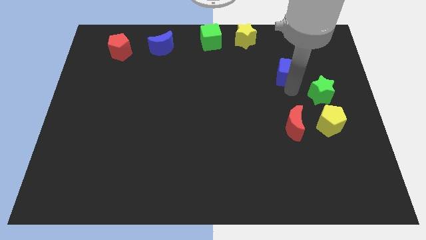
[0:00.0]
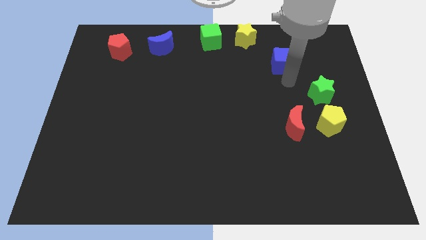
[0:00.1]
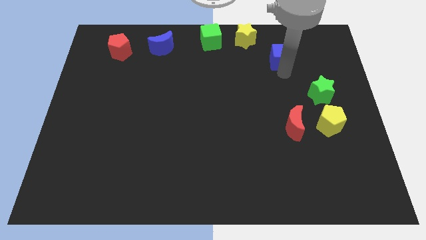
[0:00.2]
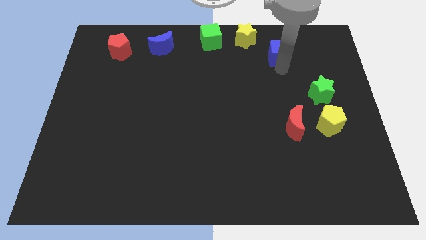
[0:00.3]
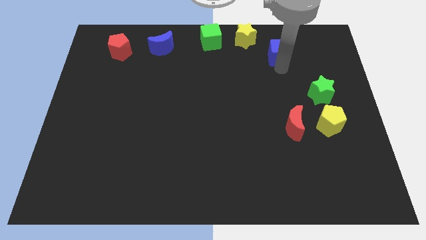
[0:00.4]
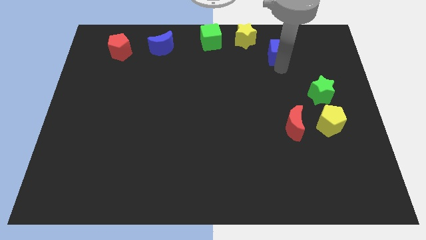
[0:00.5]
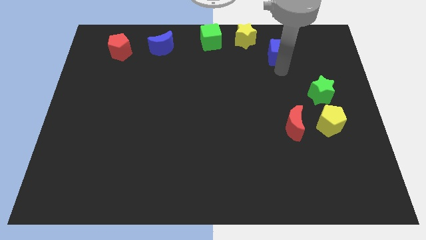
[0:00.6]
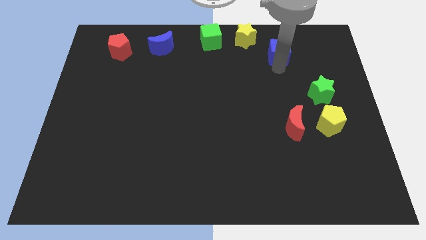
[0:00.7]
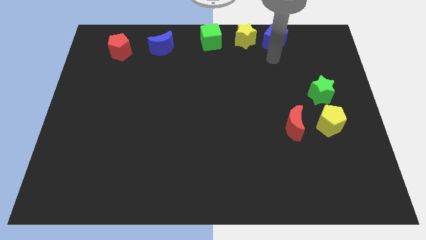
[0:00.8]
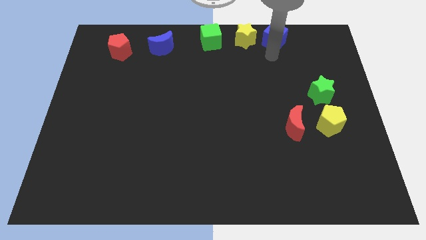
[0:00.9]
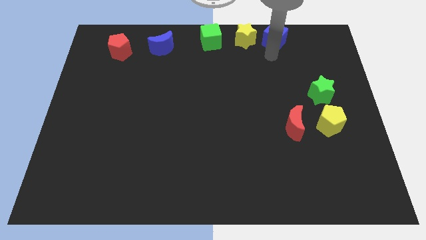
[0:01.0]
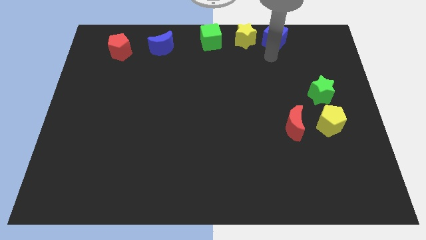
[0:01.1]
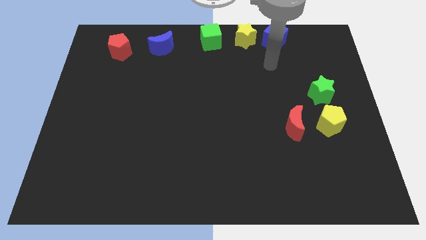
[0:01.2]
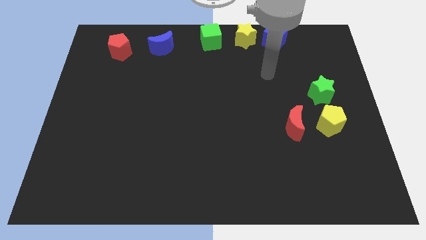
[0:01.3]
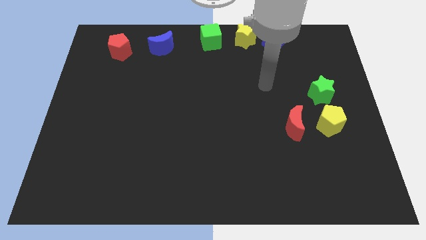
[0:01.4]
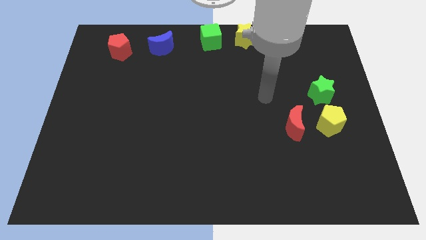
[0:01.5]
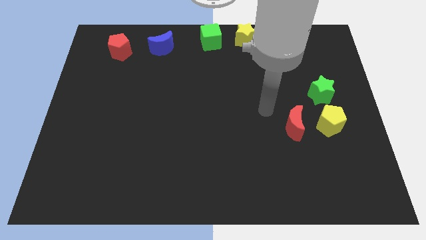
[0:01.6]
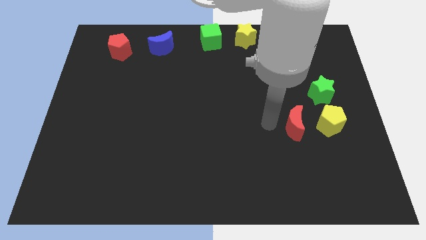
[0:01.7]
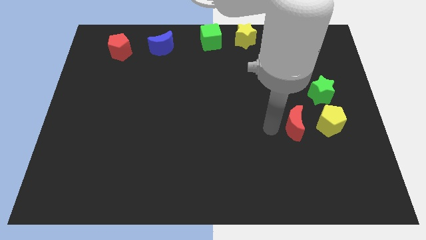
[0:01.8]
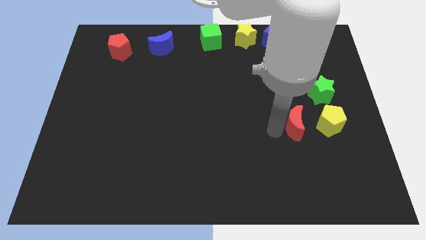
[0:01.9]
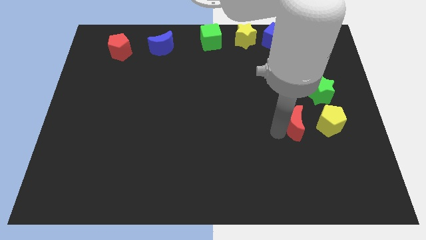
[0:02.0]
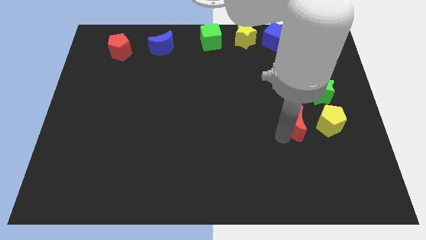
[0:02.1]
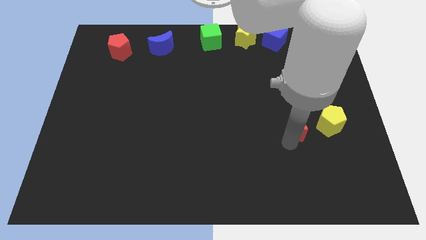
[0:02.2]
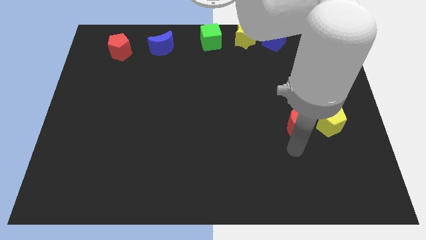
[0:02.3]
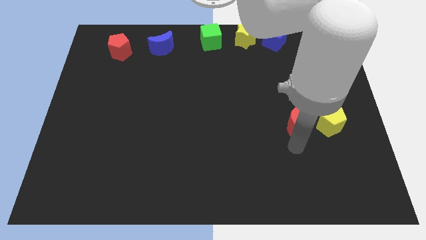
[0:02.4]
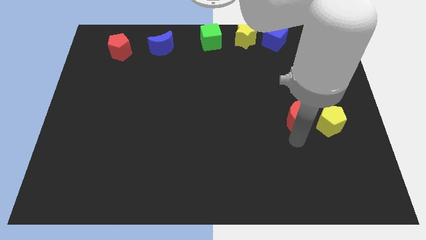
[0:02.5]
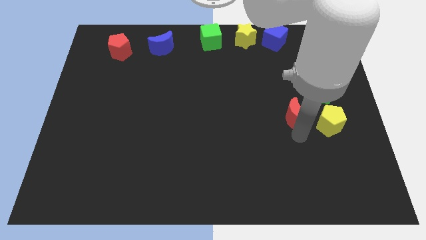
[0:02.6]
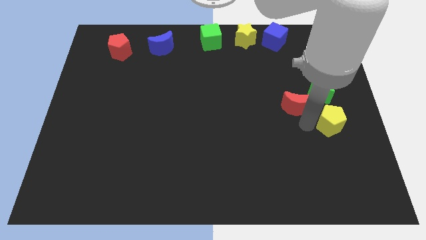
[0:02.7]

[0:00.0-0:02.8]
put the blue cube to the right of the yellow star

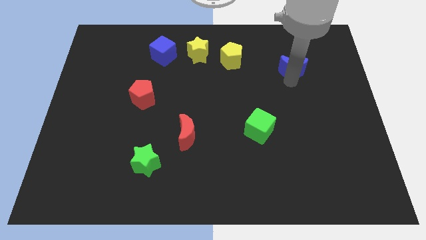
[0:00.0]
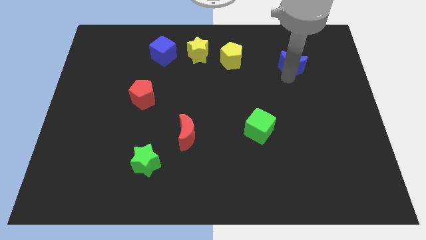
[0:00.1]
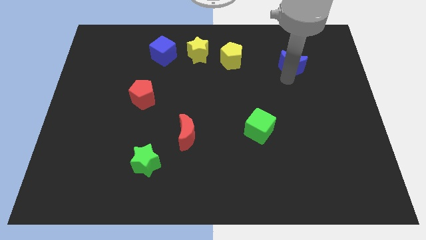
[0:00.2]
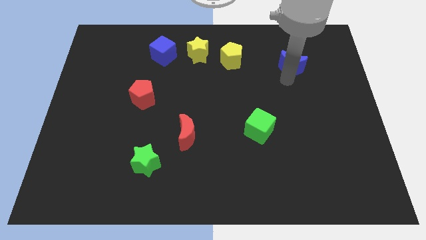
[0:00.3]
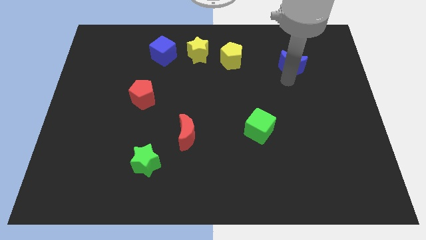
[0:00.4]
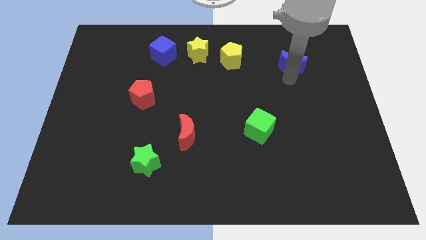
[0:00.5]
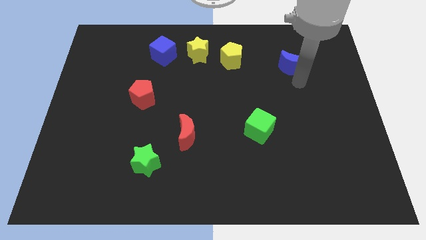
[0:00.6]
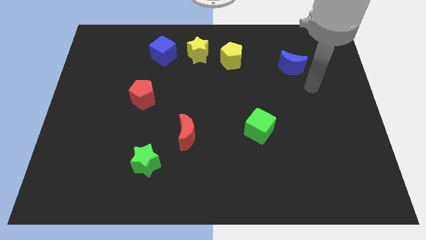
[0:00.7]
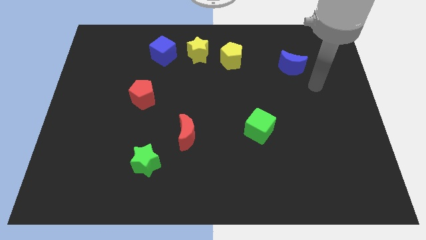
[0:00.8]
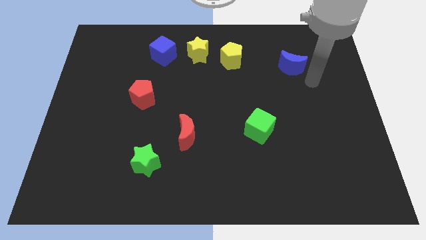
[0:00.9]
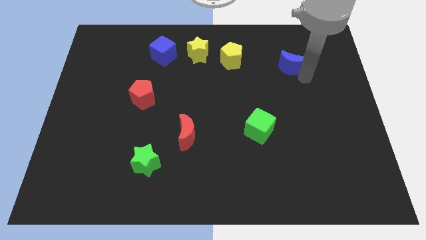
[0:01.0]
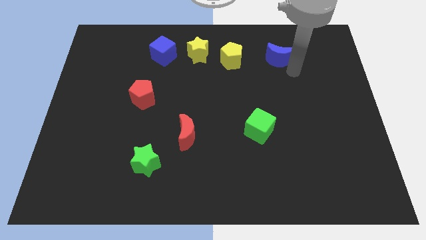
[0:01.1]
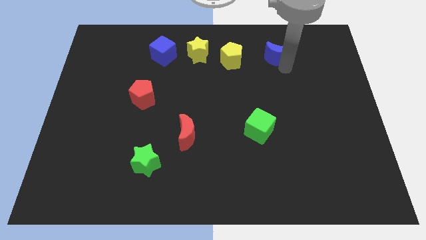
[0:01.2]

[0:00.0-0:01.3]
place blue crescent beside yellow pentagon

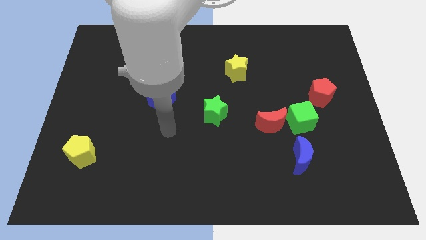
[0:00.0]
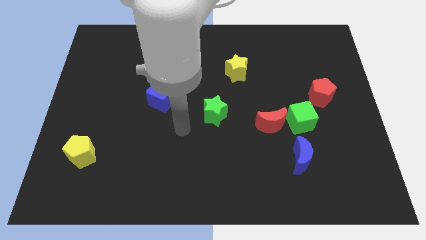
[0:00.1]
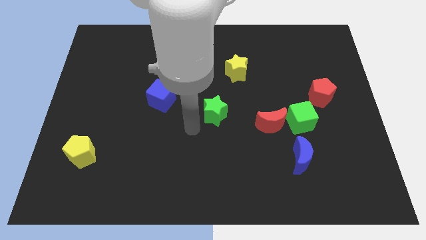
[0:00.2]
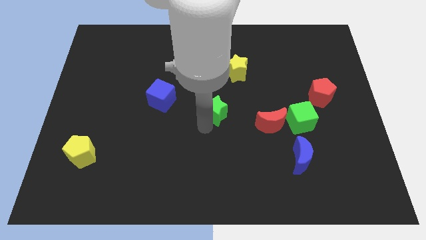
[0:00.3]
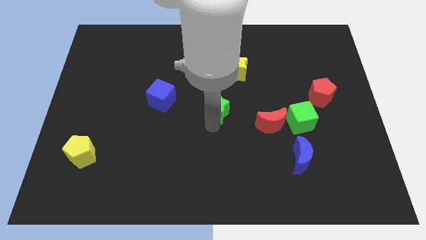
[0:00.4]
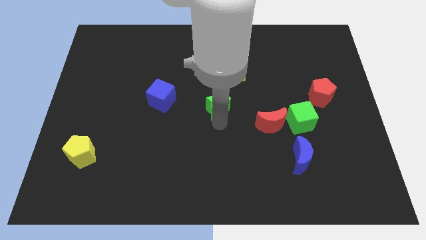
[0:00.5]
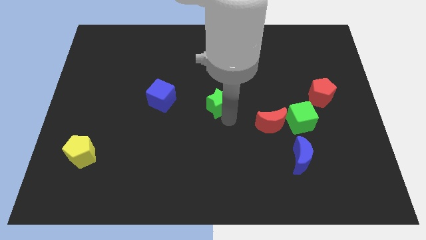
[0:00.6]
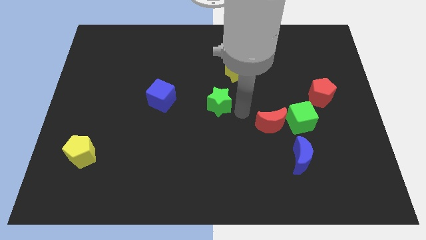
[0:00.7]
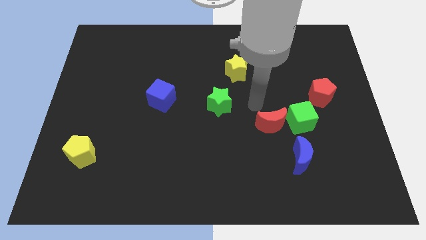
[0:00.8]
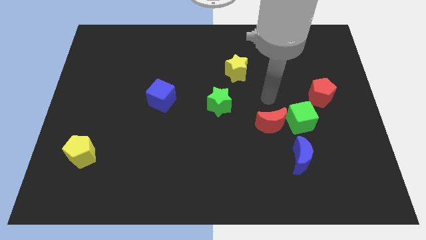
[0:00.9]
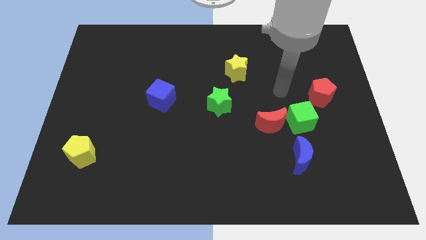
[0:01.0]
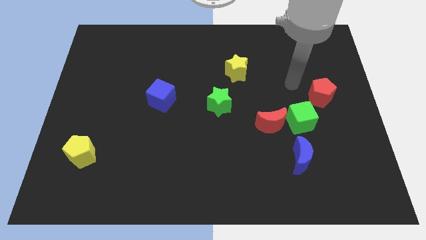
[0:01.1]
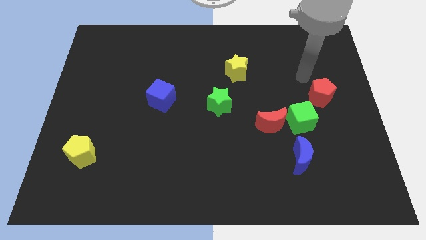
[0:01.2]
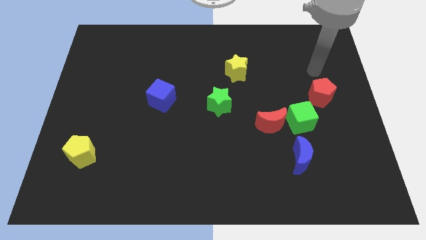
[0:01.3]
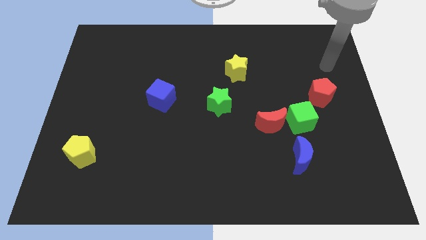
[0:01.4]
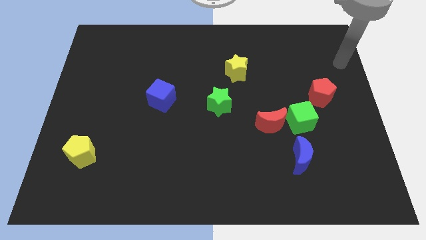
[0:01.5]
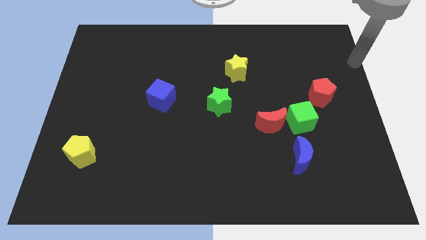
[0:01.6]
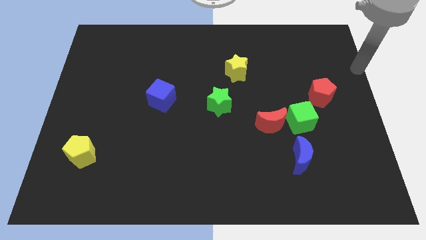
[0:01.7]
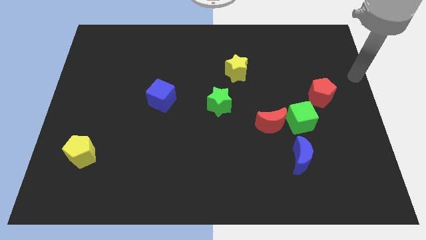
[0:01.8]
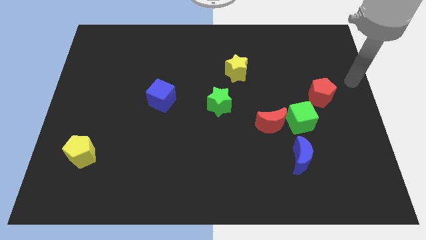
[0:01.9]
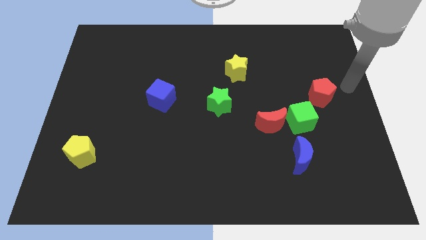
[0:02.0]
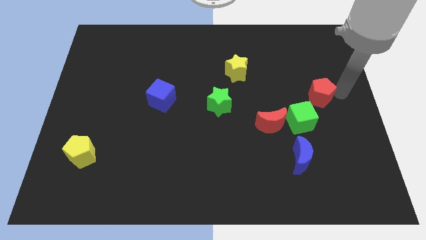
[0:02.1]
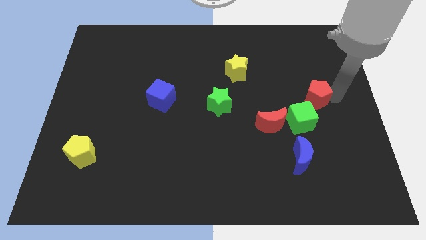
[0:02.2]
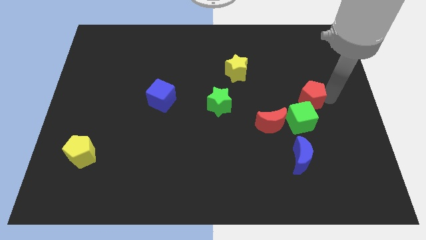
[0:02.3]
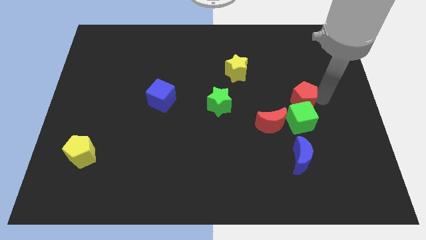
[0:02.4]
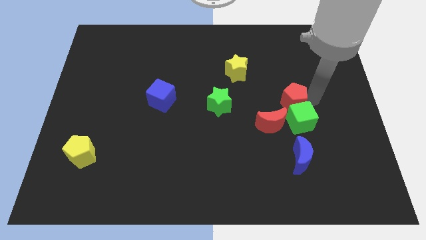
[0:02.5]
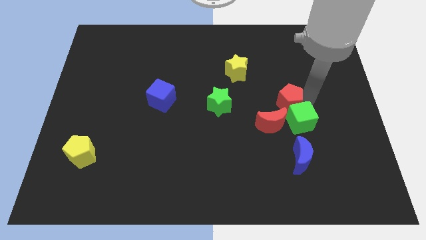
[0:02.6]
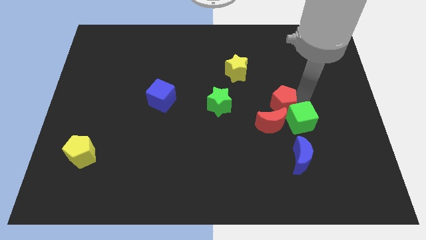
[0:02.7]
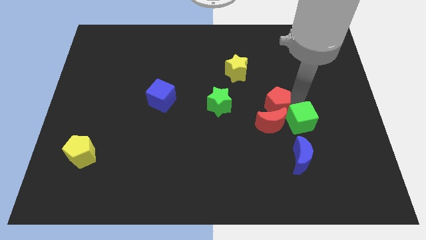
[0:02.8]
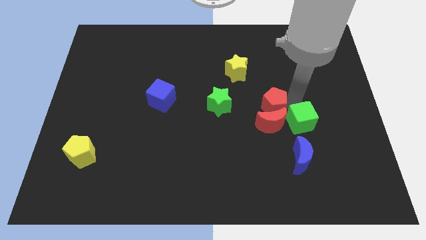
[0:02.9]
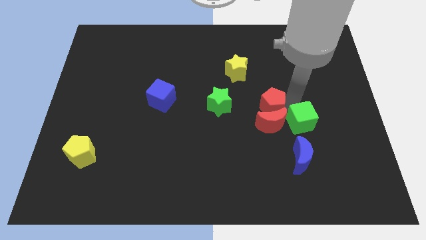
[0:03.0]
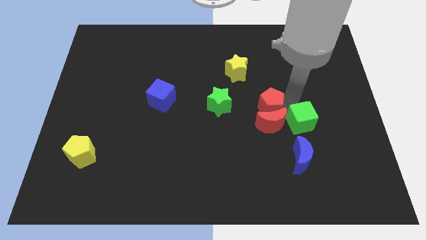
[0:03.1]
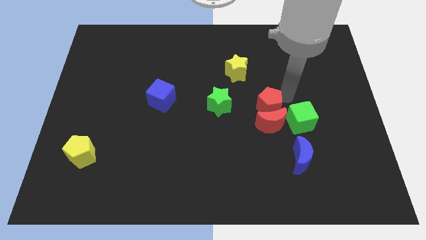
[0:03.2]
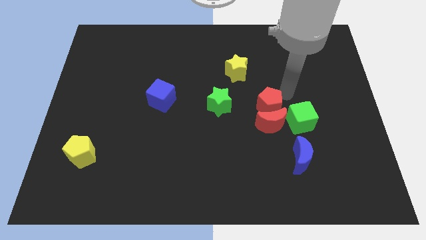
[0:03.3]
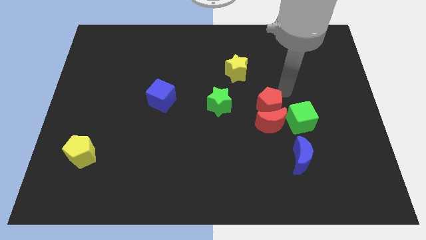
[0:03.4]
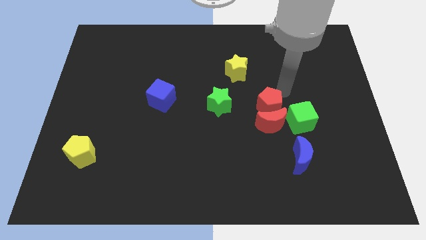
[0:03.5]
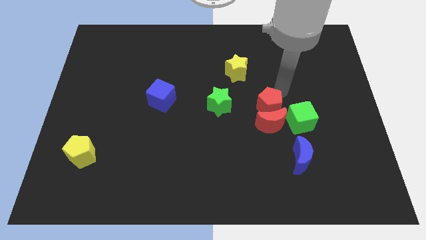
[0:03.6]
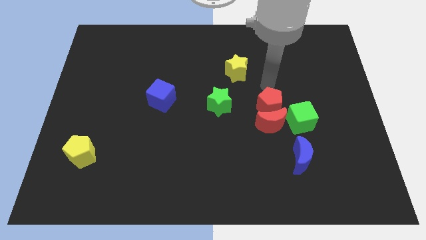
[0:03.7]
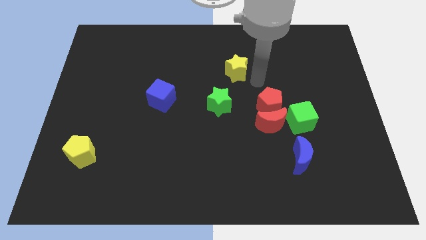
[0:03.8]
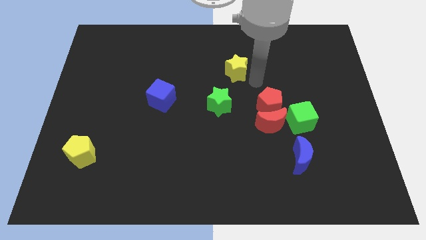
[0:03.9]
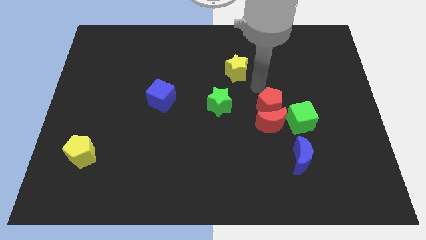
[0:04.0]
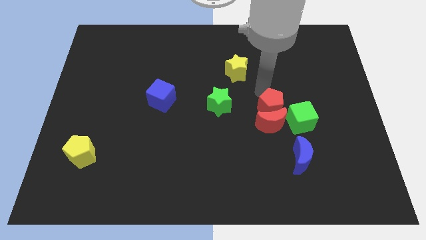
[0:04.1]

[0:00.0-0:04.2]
place the red pentagon above the red moon

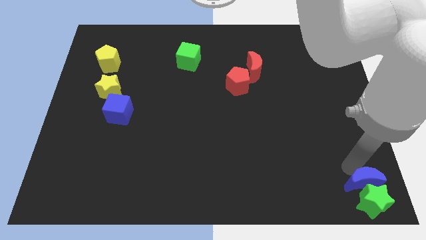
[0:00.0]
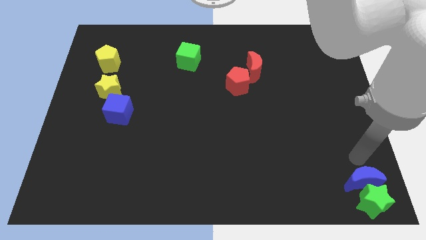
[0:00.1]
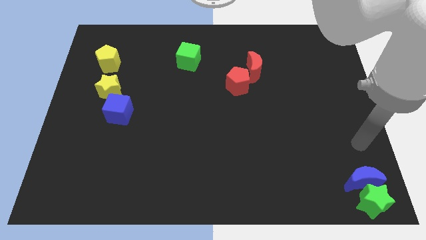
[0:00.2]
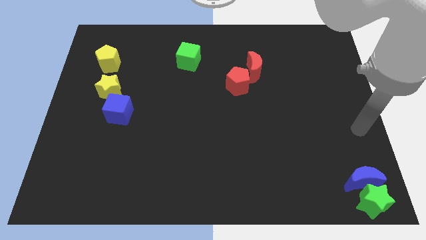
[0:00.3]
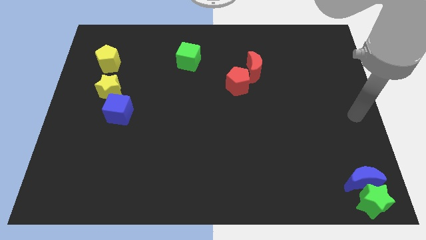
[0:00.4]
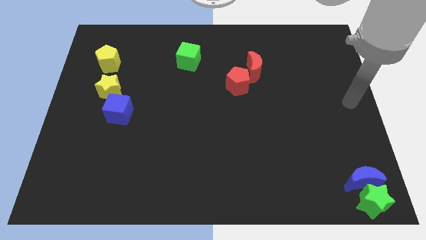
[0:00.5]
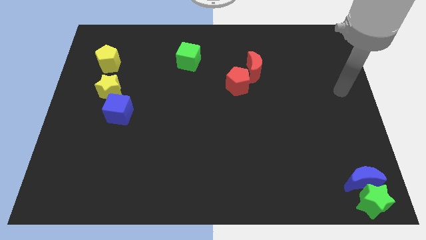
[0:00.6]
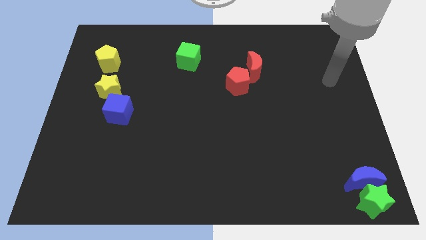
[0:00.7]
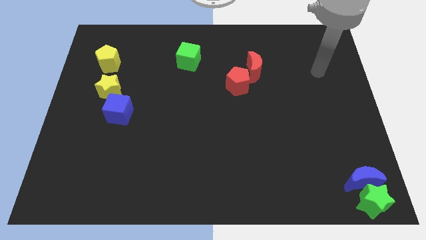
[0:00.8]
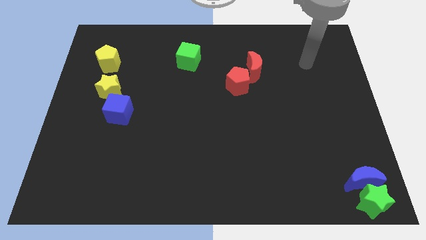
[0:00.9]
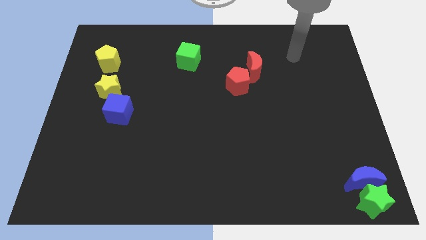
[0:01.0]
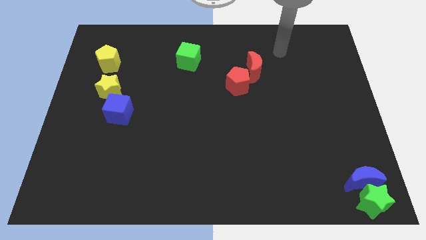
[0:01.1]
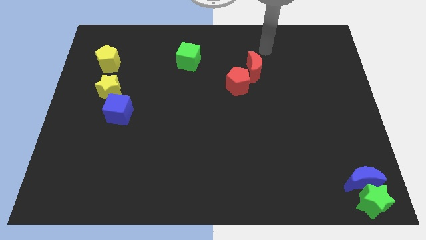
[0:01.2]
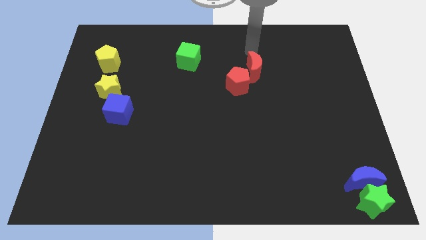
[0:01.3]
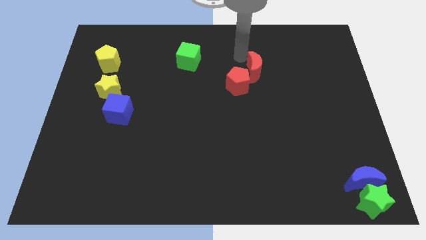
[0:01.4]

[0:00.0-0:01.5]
place your arm to the top of red moon
